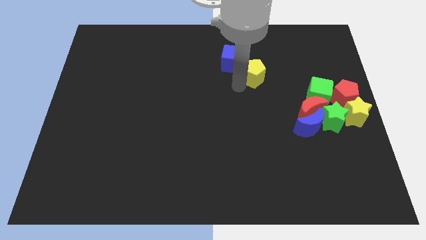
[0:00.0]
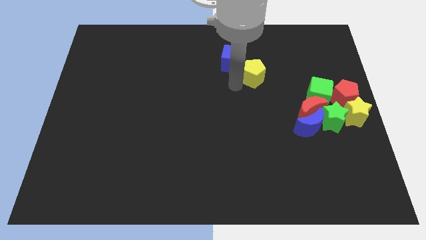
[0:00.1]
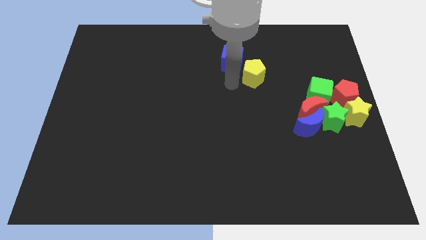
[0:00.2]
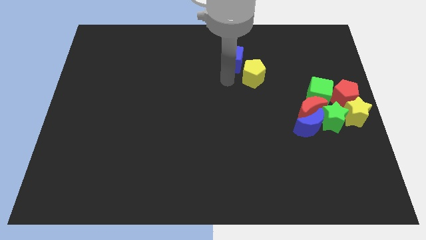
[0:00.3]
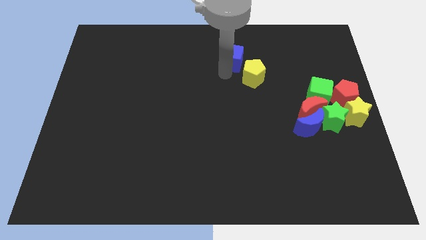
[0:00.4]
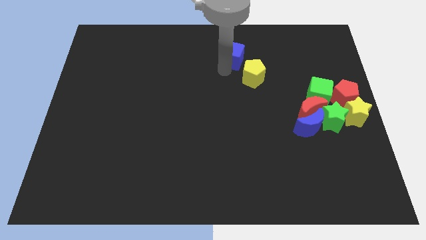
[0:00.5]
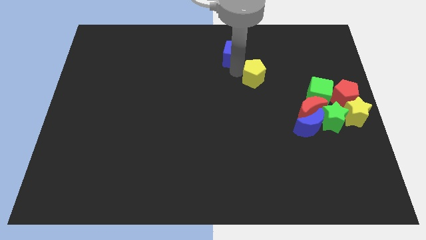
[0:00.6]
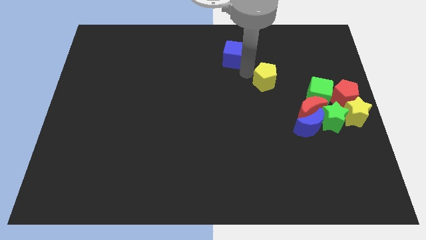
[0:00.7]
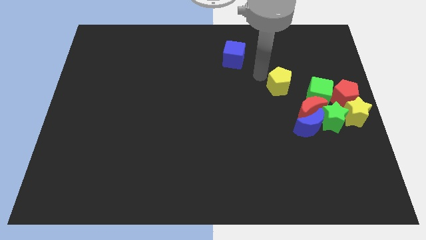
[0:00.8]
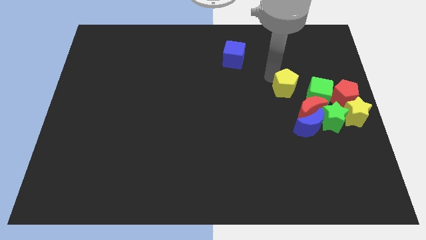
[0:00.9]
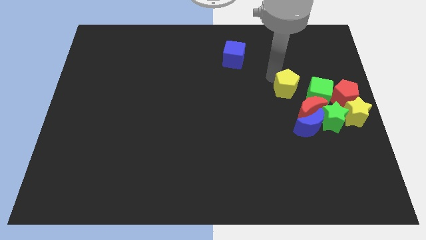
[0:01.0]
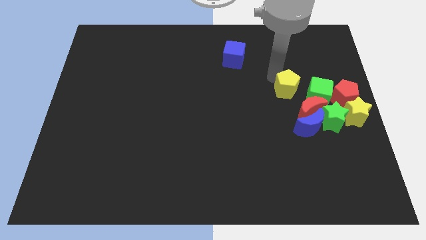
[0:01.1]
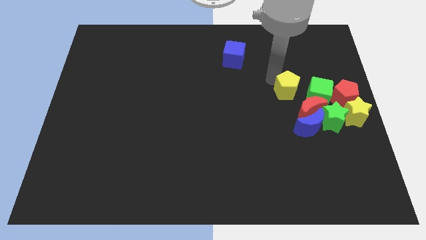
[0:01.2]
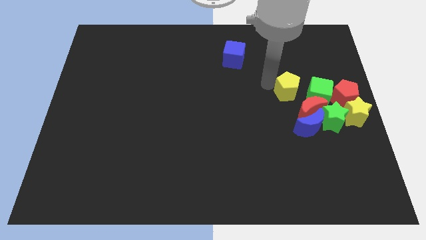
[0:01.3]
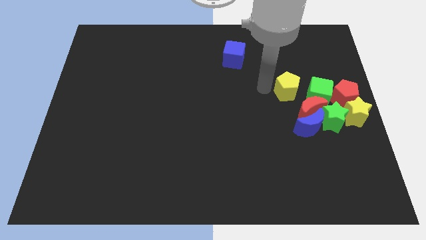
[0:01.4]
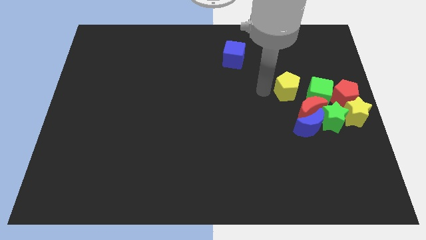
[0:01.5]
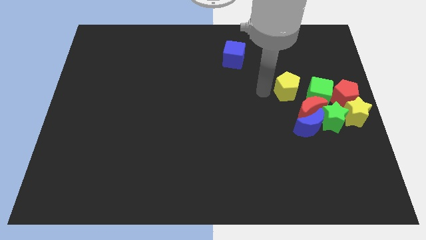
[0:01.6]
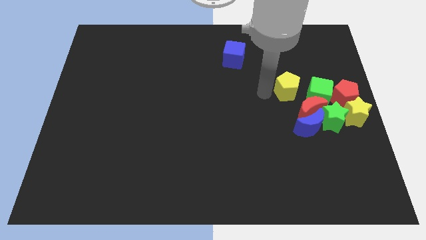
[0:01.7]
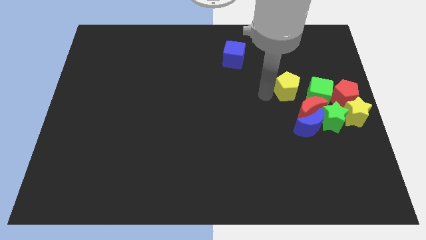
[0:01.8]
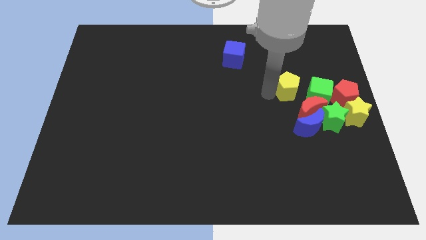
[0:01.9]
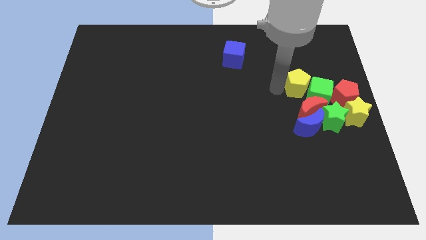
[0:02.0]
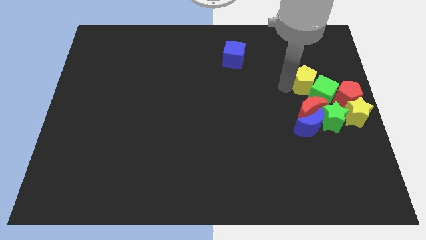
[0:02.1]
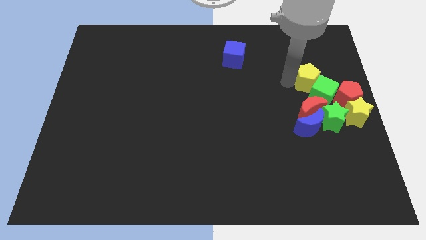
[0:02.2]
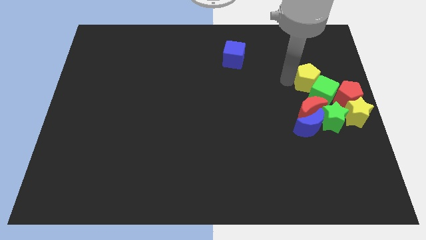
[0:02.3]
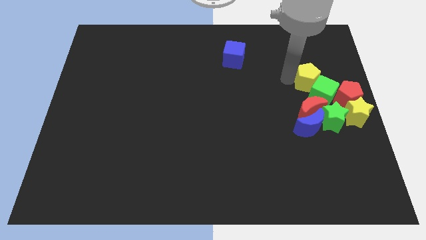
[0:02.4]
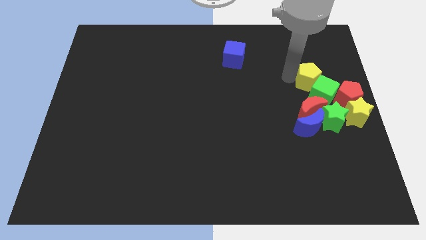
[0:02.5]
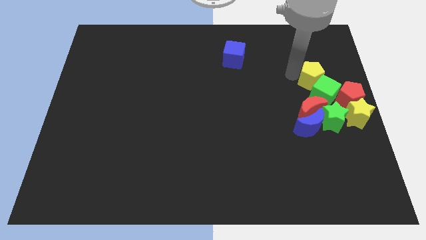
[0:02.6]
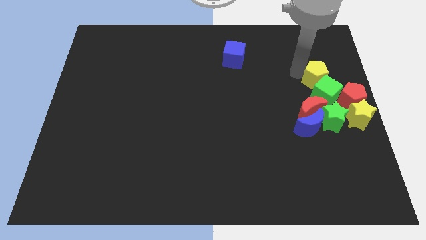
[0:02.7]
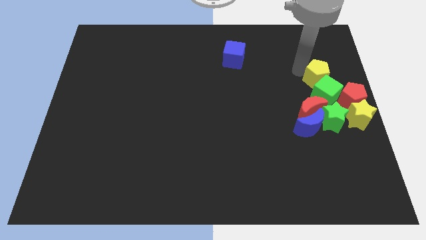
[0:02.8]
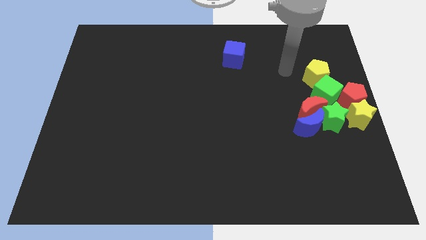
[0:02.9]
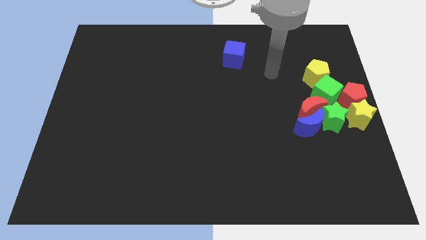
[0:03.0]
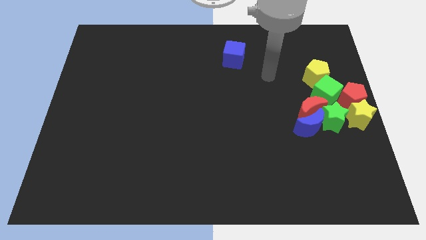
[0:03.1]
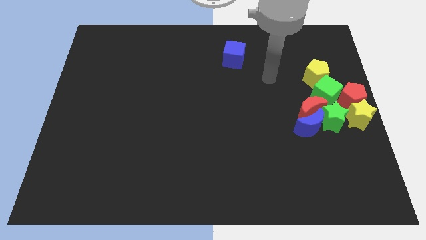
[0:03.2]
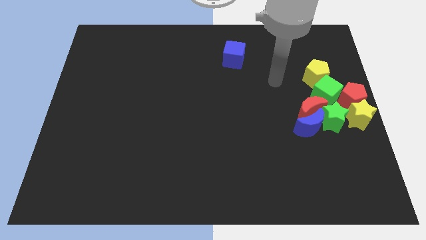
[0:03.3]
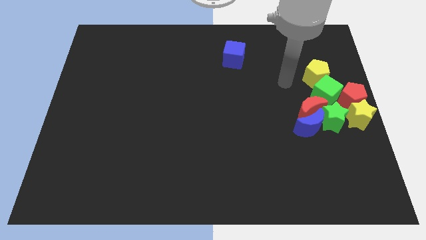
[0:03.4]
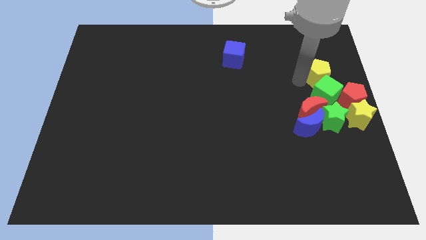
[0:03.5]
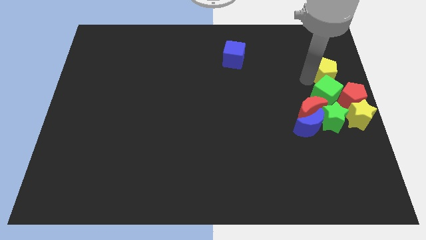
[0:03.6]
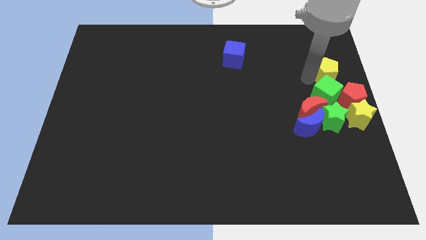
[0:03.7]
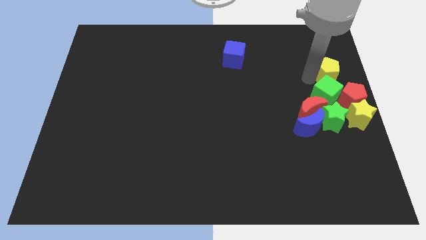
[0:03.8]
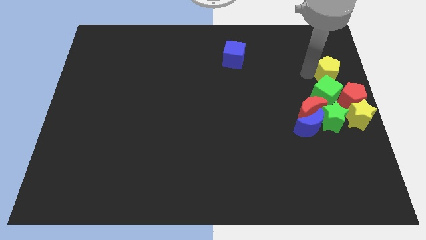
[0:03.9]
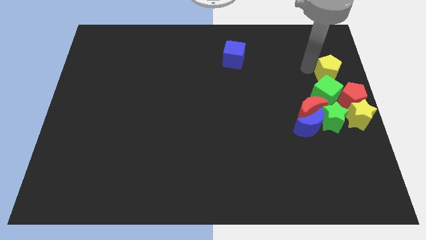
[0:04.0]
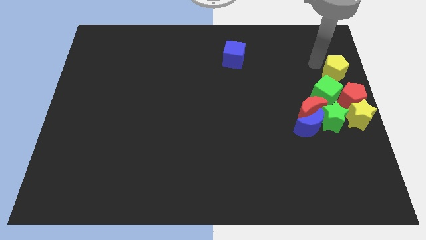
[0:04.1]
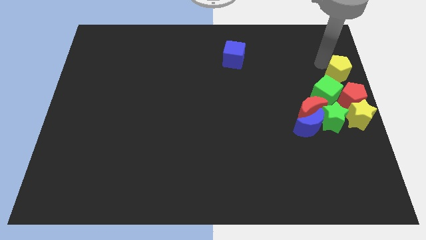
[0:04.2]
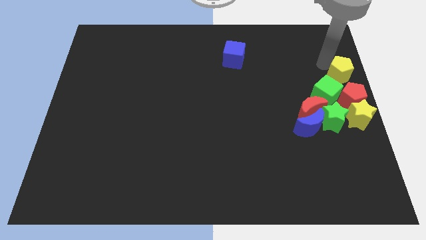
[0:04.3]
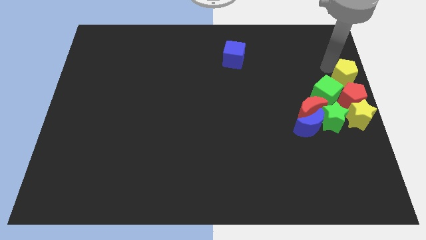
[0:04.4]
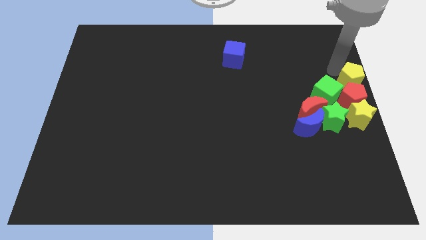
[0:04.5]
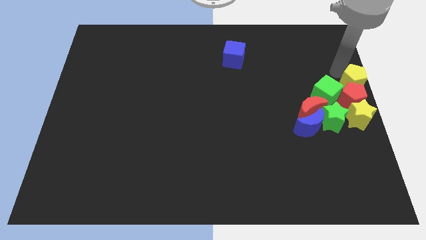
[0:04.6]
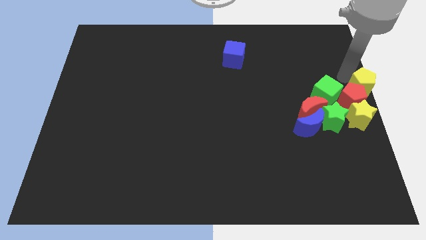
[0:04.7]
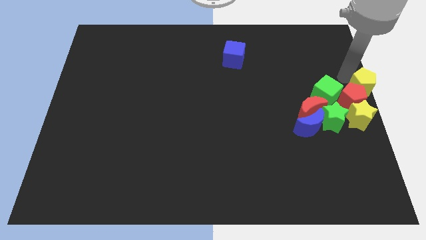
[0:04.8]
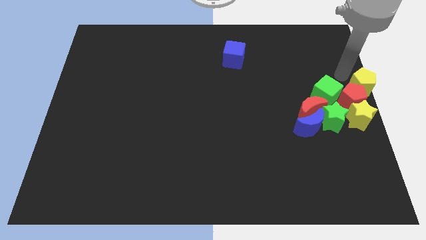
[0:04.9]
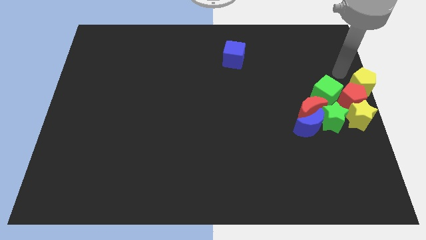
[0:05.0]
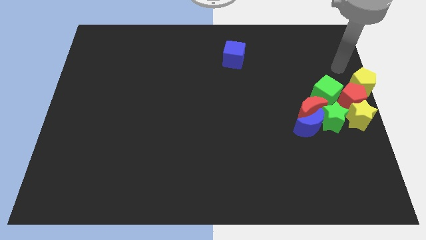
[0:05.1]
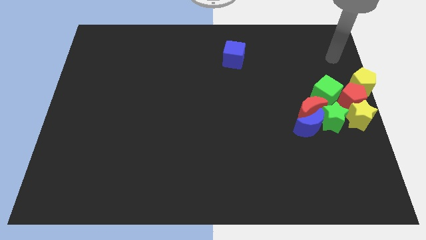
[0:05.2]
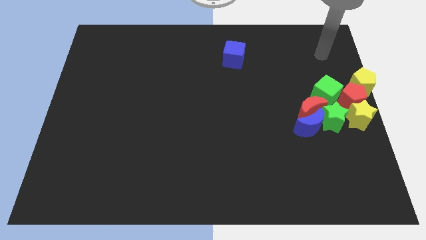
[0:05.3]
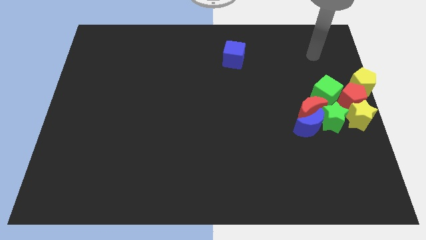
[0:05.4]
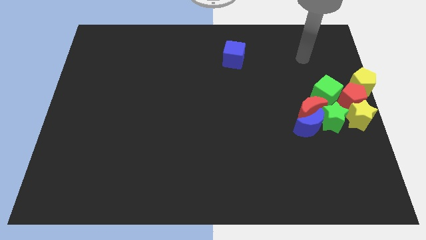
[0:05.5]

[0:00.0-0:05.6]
place yellow pentagon to the top of red pentagon

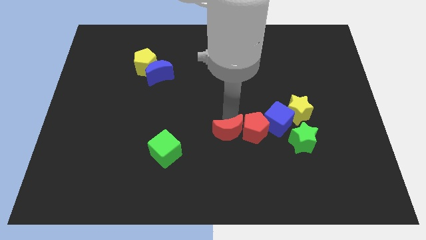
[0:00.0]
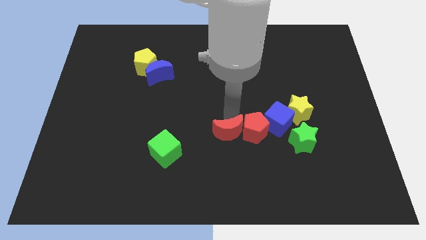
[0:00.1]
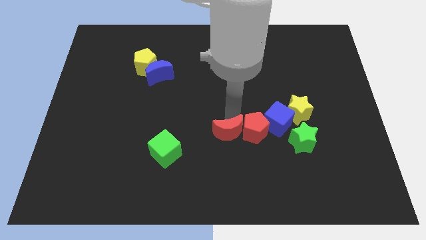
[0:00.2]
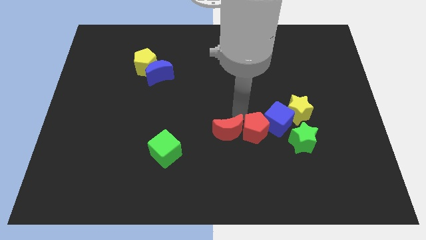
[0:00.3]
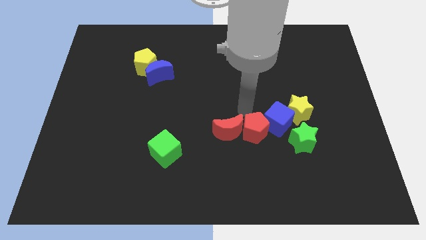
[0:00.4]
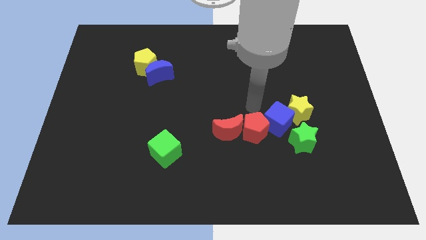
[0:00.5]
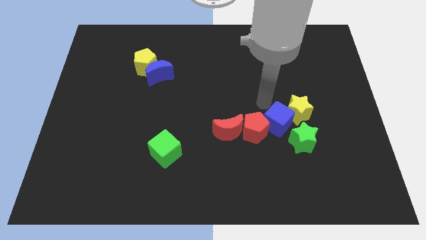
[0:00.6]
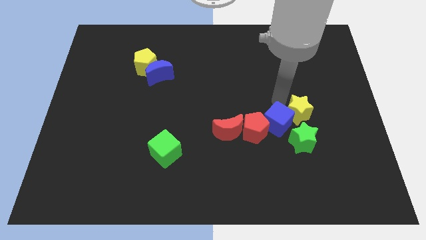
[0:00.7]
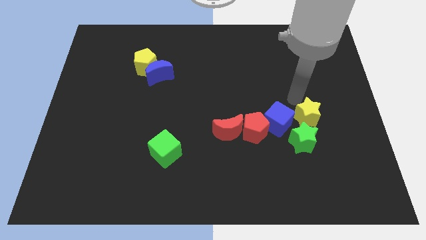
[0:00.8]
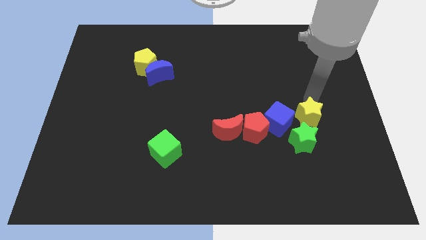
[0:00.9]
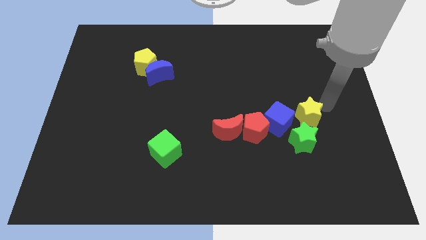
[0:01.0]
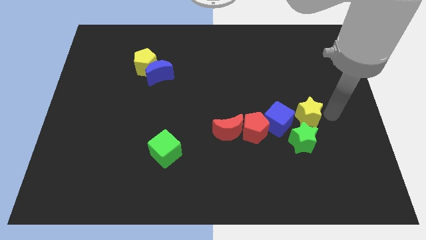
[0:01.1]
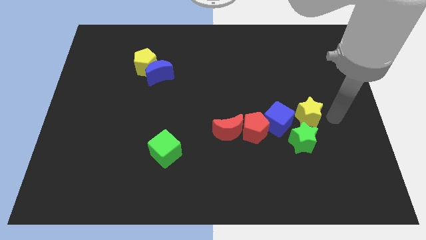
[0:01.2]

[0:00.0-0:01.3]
slightly push the yellow star towards the green star

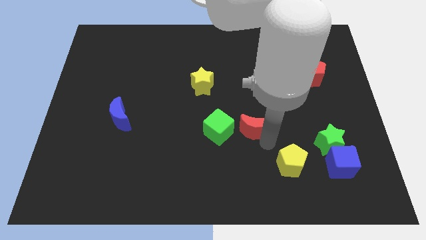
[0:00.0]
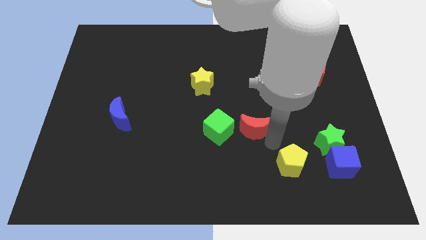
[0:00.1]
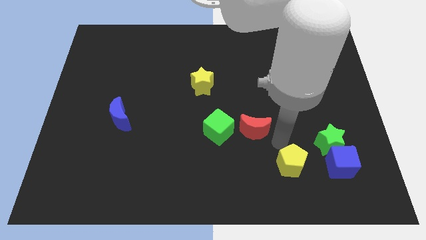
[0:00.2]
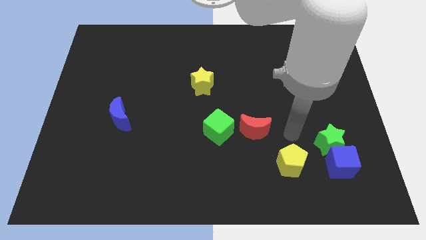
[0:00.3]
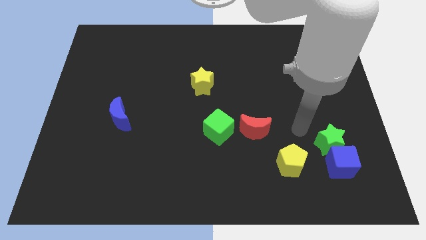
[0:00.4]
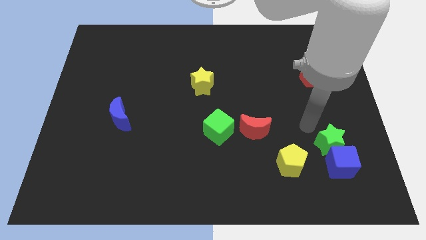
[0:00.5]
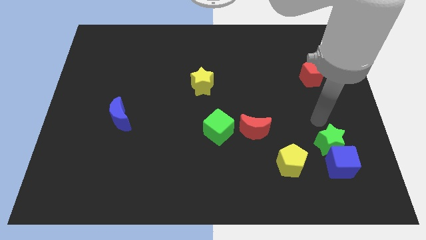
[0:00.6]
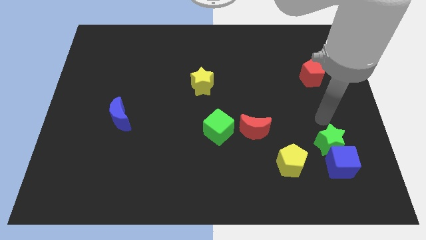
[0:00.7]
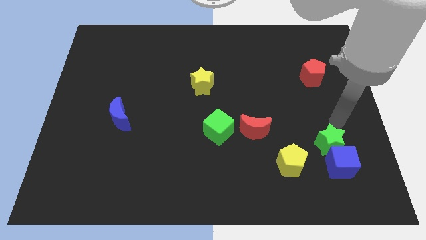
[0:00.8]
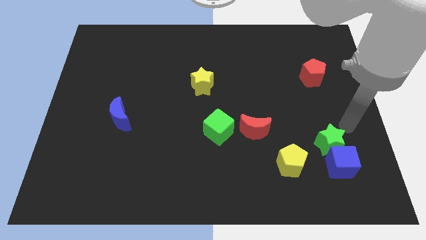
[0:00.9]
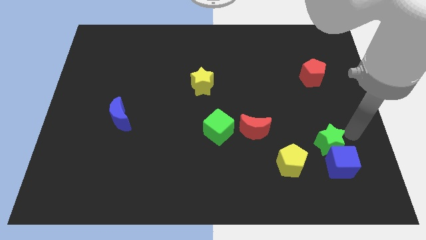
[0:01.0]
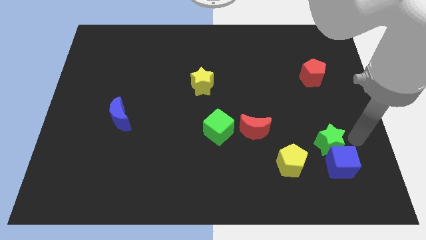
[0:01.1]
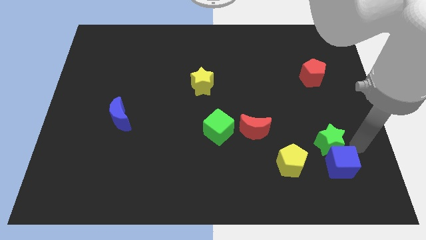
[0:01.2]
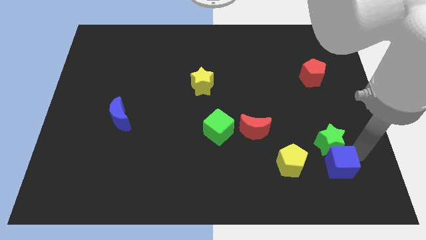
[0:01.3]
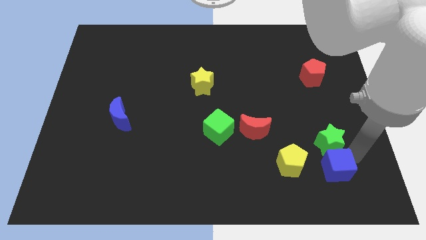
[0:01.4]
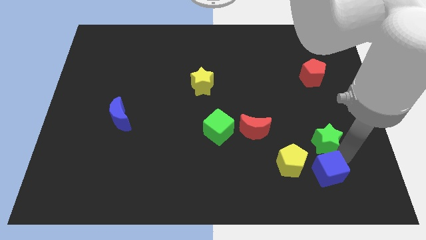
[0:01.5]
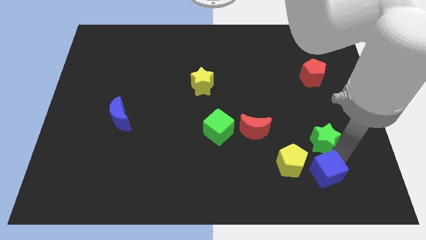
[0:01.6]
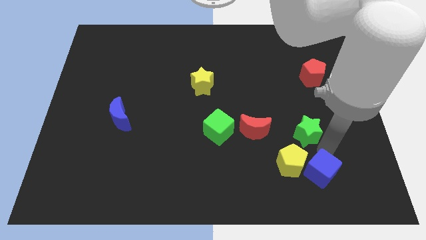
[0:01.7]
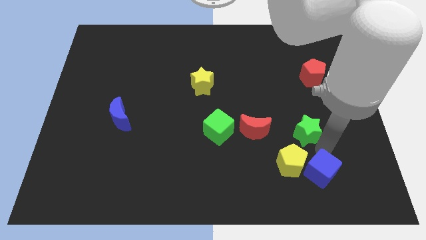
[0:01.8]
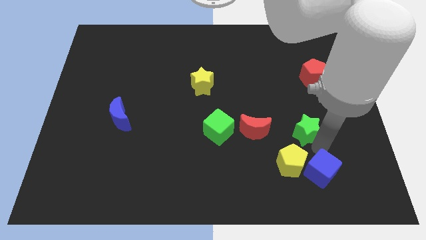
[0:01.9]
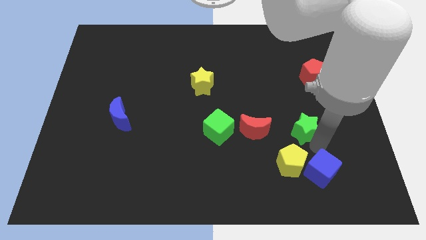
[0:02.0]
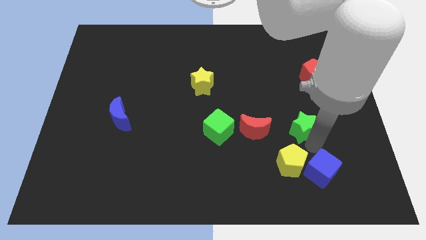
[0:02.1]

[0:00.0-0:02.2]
place your arm in between the green star and blue cube and separate
